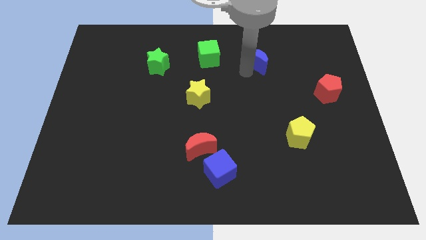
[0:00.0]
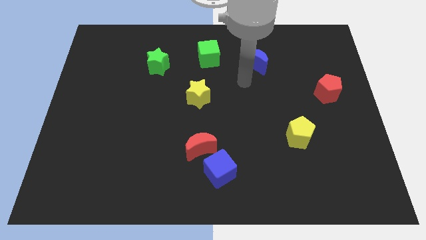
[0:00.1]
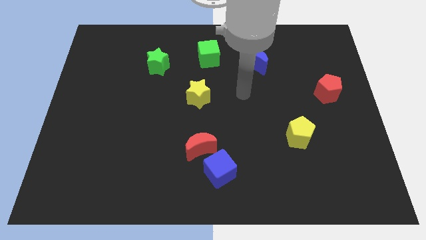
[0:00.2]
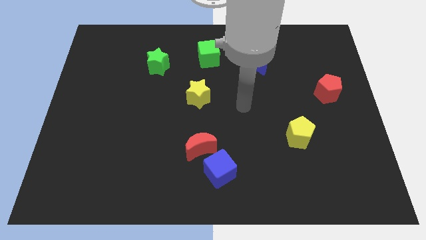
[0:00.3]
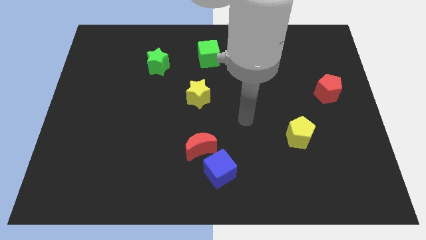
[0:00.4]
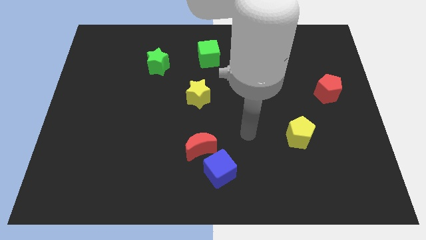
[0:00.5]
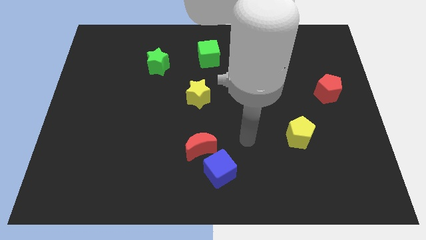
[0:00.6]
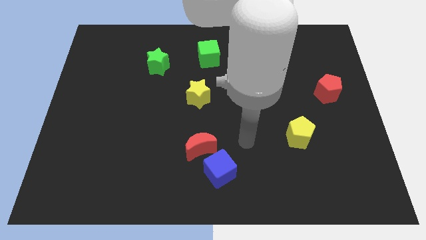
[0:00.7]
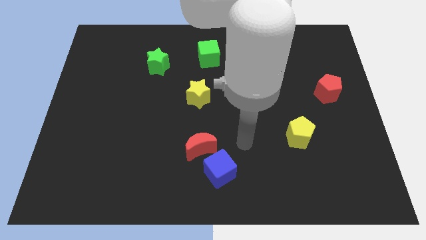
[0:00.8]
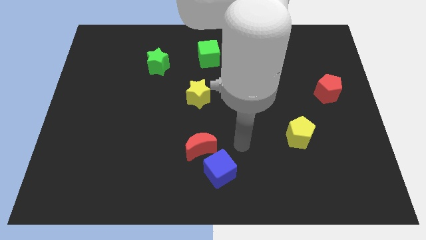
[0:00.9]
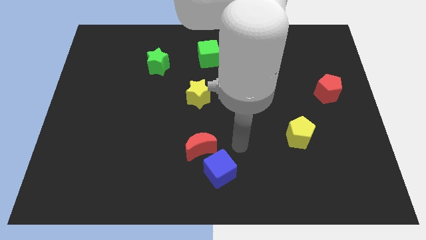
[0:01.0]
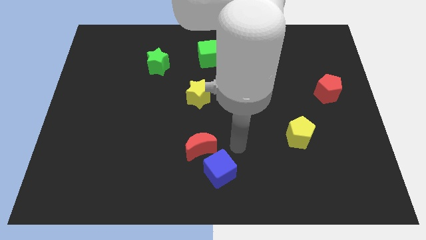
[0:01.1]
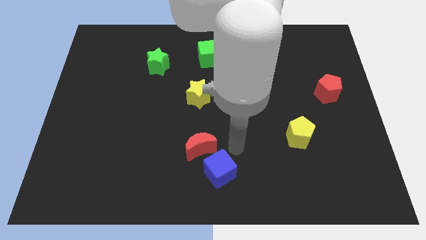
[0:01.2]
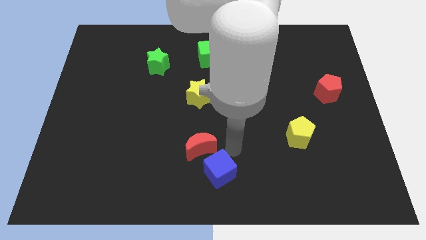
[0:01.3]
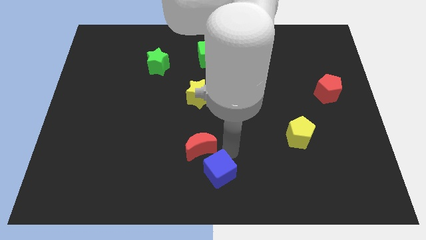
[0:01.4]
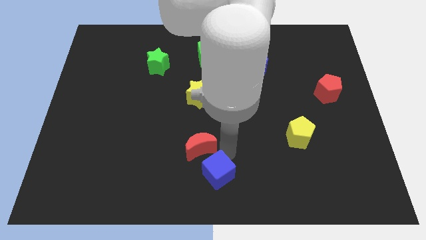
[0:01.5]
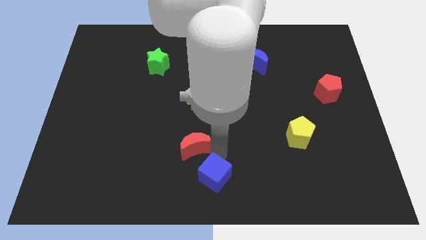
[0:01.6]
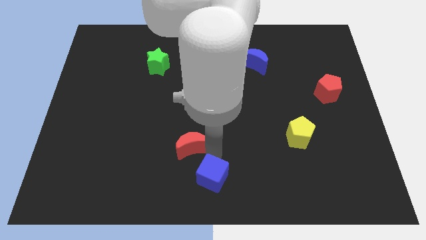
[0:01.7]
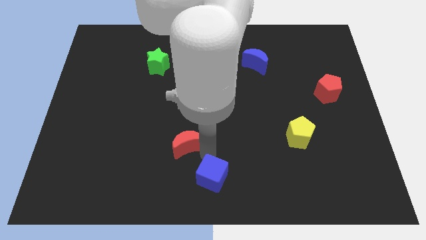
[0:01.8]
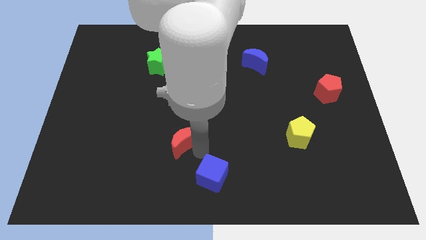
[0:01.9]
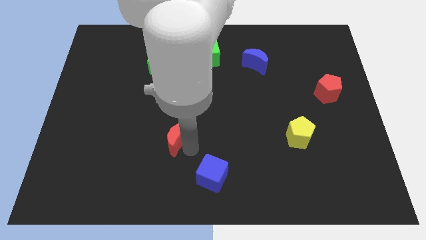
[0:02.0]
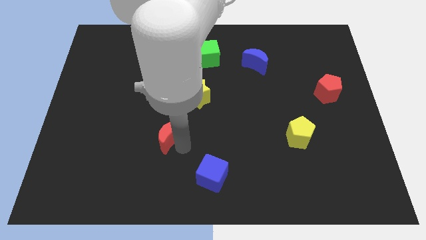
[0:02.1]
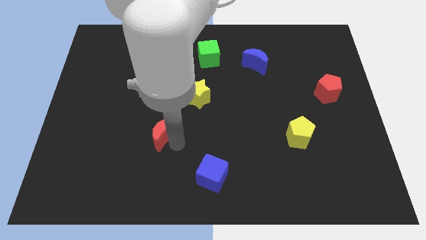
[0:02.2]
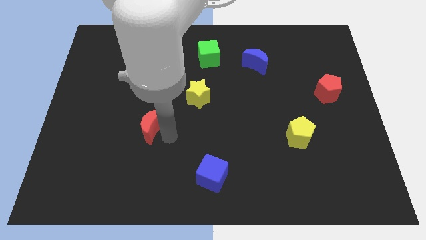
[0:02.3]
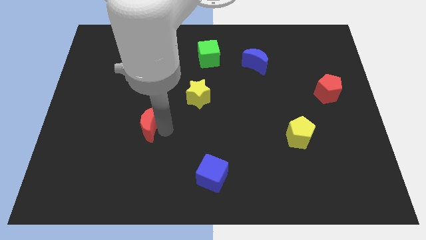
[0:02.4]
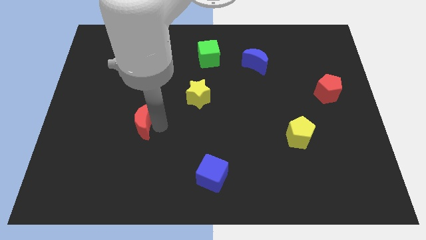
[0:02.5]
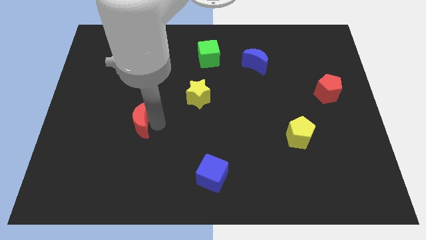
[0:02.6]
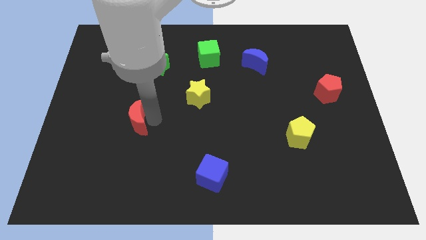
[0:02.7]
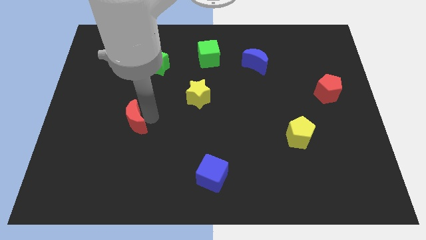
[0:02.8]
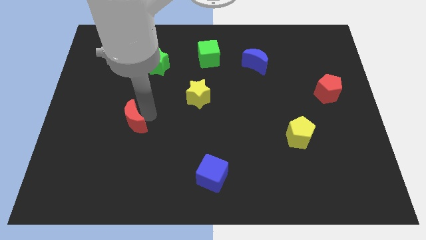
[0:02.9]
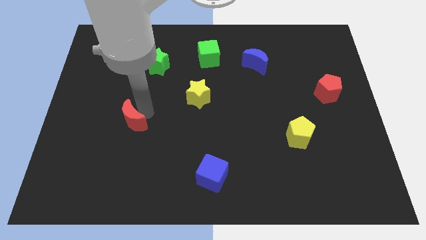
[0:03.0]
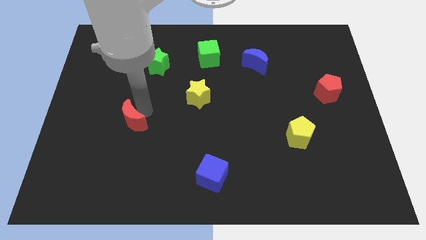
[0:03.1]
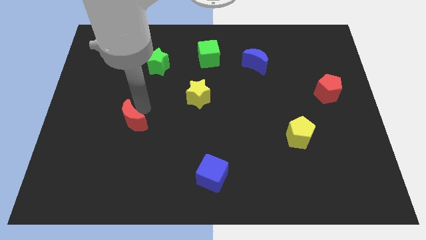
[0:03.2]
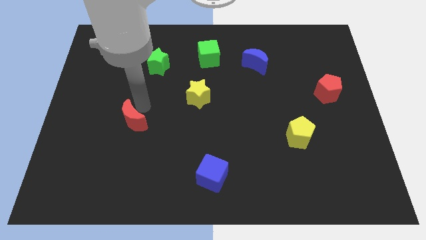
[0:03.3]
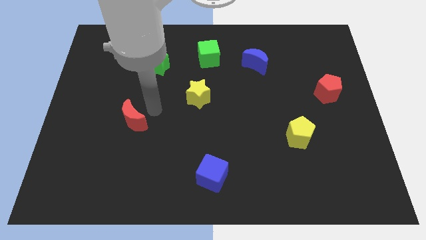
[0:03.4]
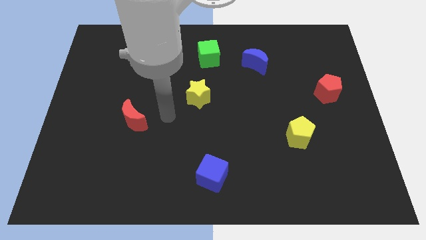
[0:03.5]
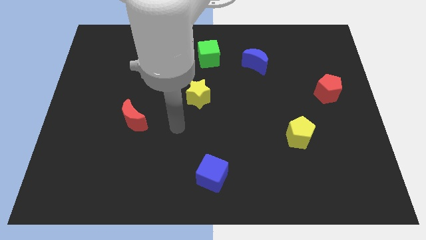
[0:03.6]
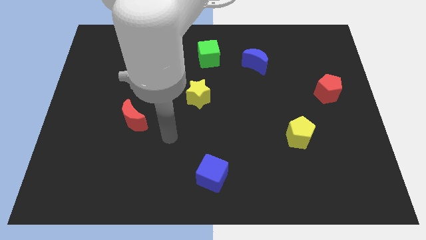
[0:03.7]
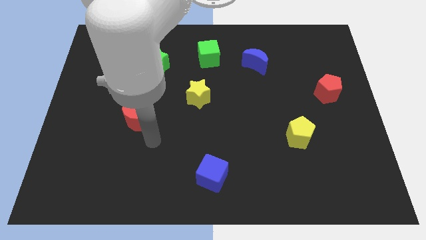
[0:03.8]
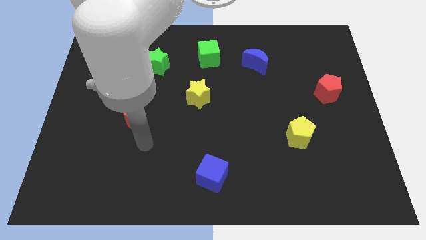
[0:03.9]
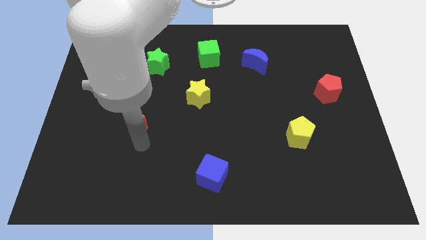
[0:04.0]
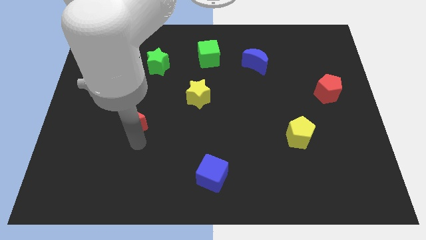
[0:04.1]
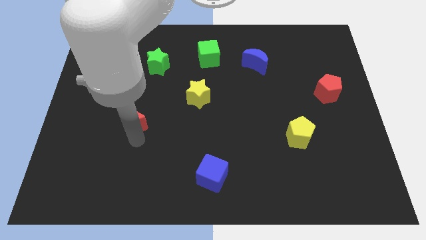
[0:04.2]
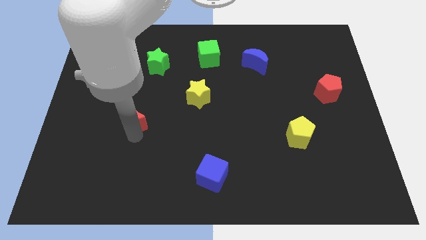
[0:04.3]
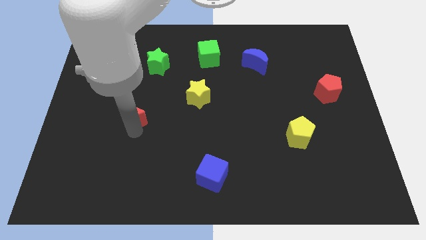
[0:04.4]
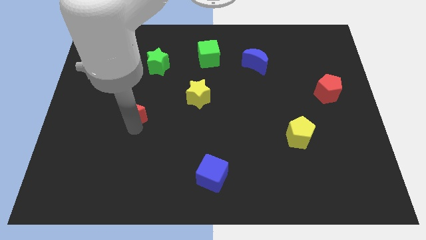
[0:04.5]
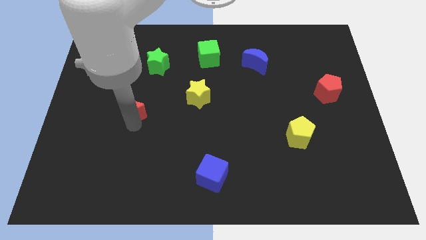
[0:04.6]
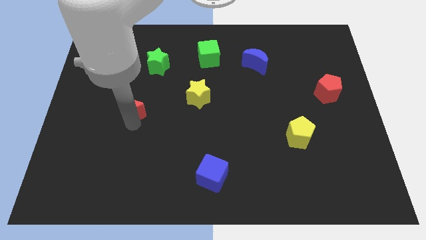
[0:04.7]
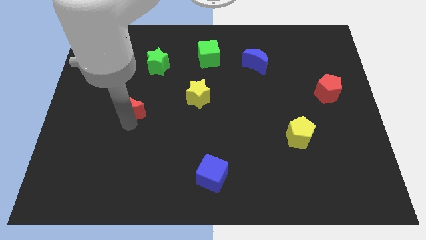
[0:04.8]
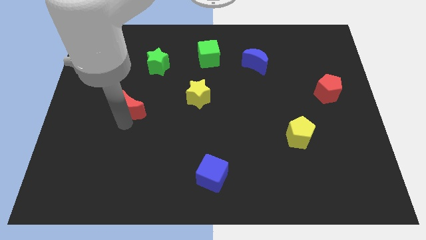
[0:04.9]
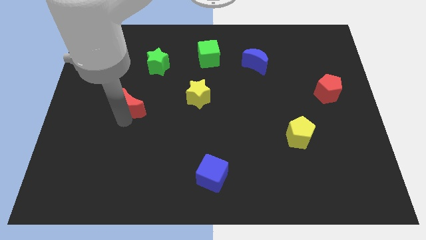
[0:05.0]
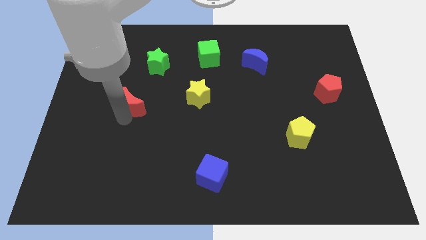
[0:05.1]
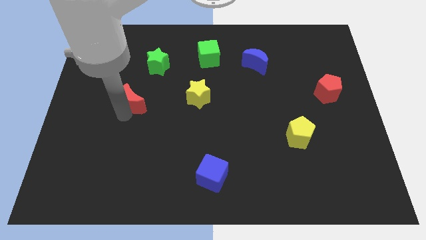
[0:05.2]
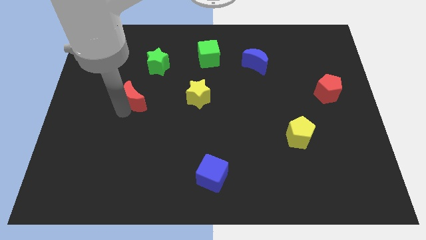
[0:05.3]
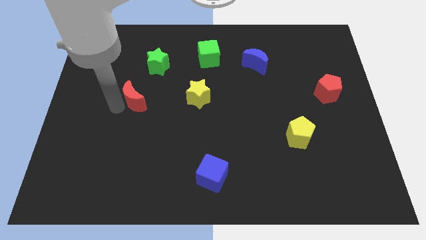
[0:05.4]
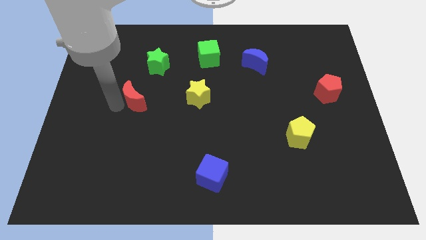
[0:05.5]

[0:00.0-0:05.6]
move the red crescent to the left of the yellow star

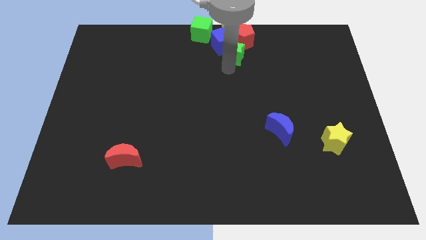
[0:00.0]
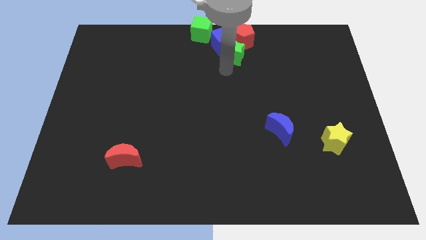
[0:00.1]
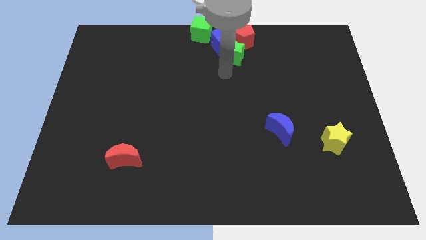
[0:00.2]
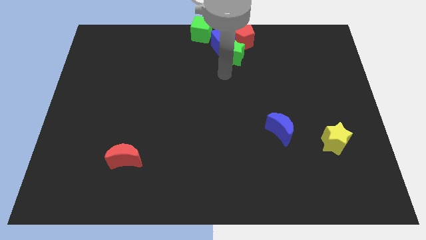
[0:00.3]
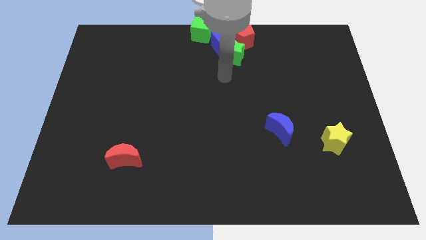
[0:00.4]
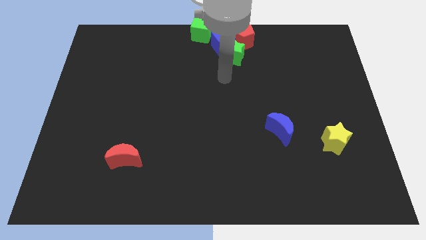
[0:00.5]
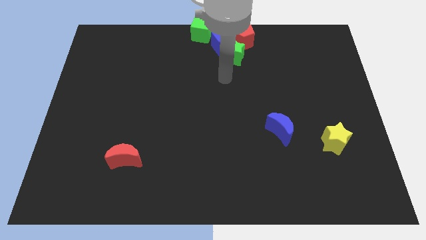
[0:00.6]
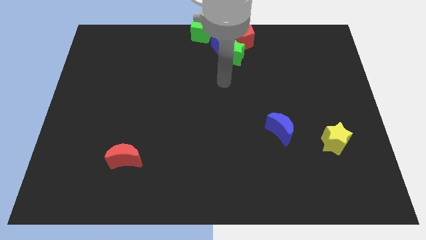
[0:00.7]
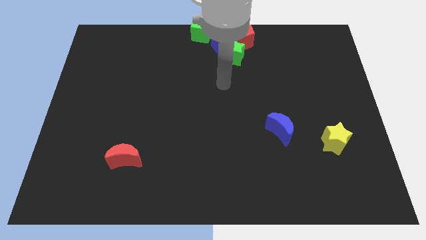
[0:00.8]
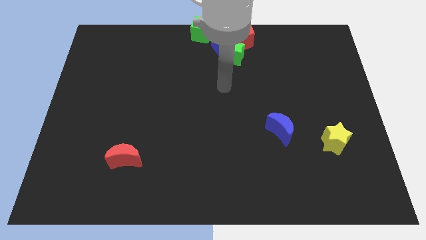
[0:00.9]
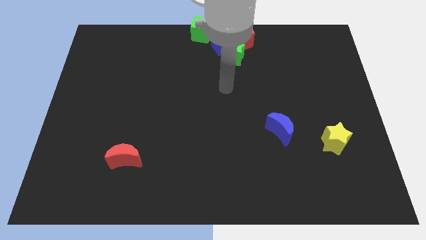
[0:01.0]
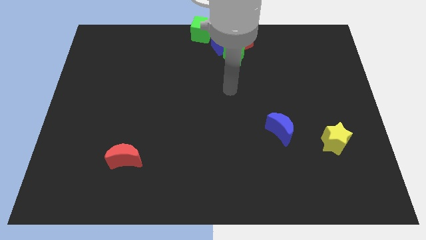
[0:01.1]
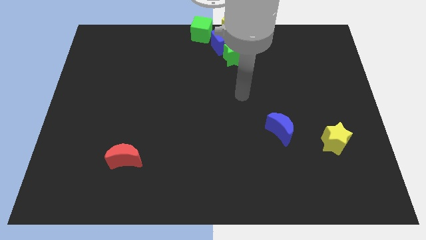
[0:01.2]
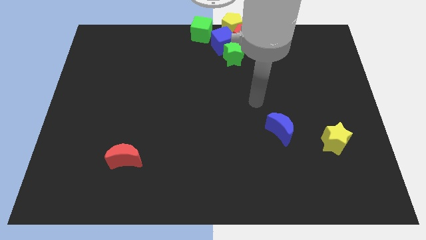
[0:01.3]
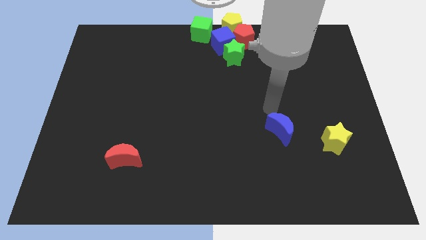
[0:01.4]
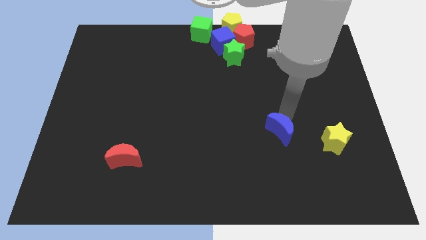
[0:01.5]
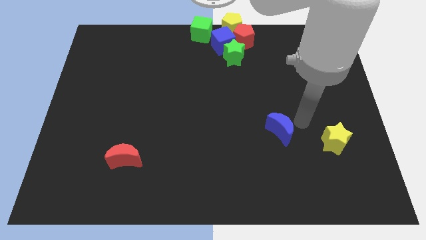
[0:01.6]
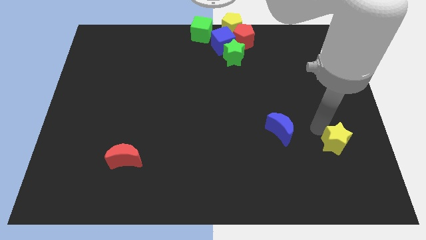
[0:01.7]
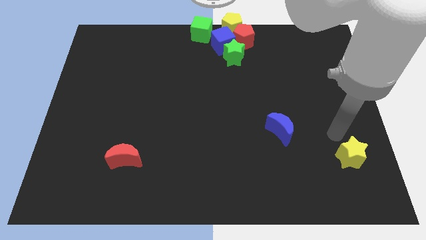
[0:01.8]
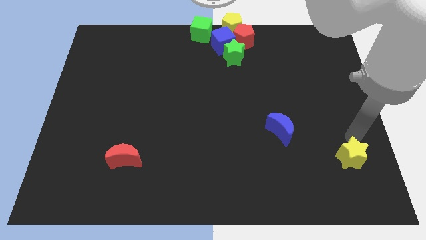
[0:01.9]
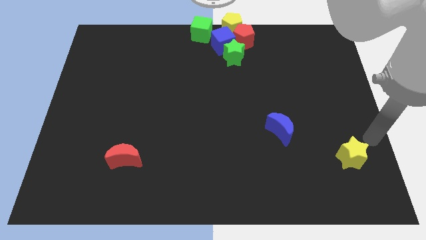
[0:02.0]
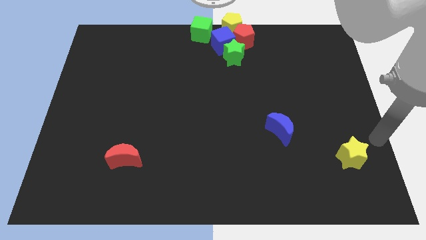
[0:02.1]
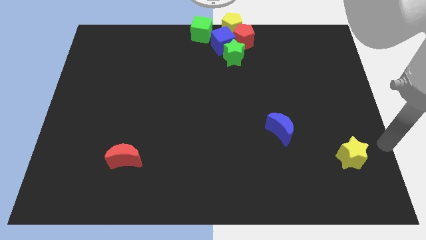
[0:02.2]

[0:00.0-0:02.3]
move your arm to right of the yellow star

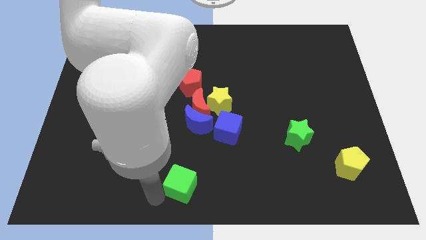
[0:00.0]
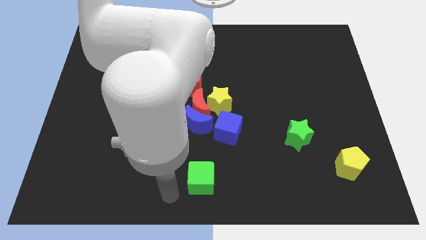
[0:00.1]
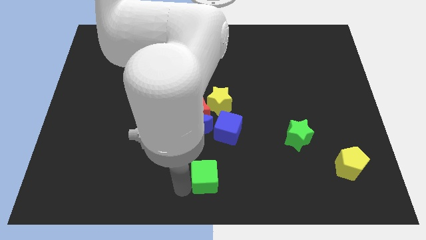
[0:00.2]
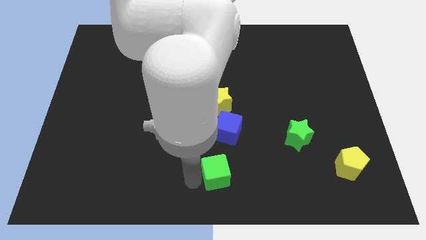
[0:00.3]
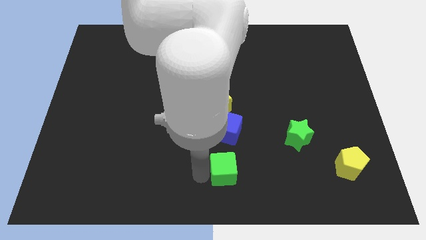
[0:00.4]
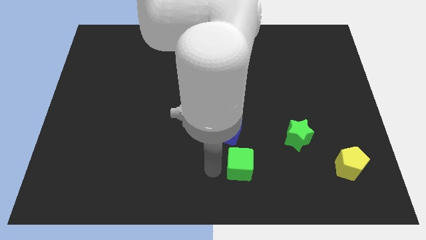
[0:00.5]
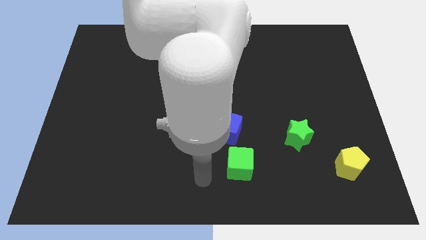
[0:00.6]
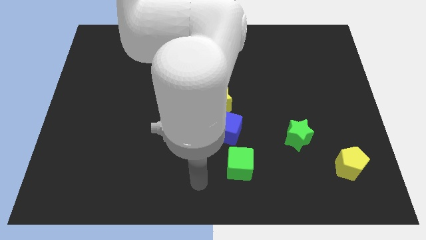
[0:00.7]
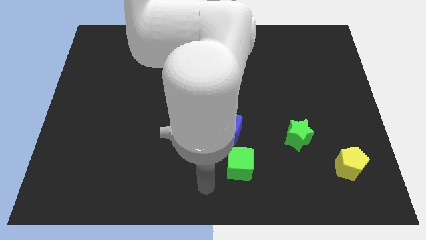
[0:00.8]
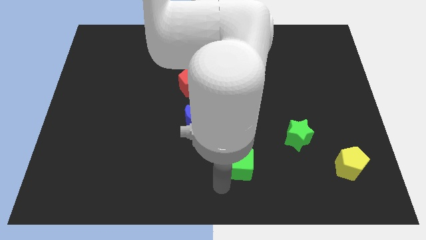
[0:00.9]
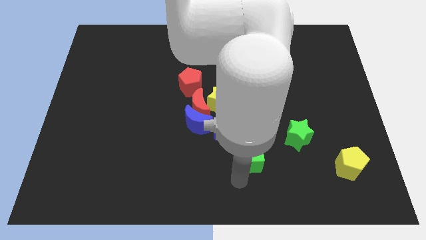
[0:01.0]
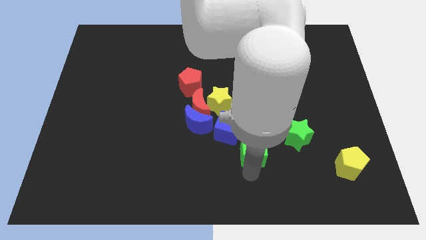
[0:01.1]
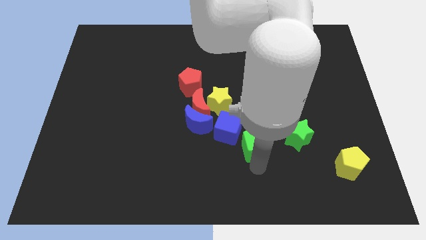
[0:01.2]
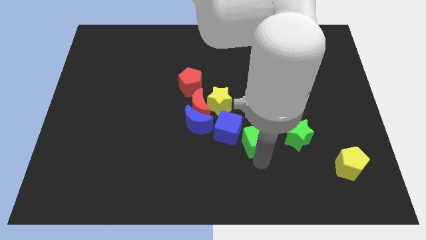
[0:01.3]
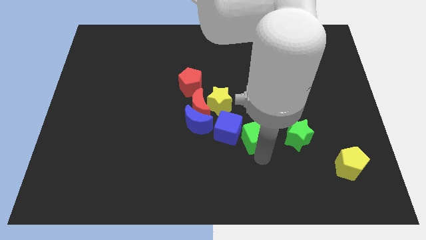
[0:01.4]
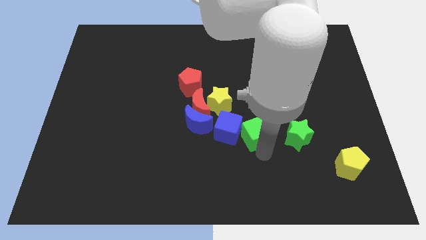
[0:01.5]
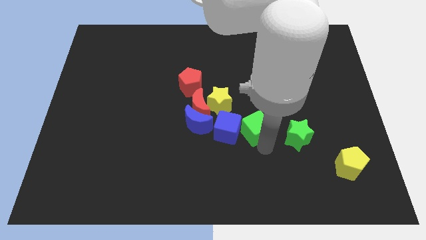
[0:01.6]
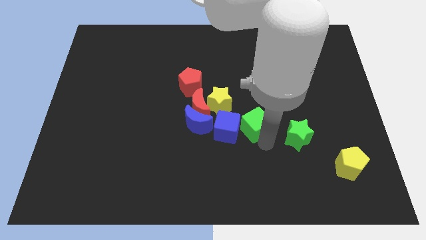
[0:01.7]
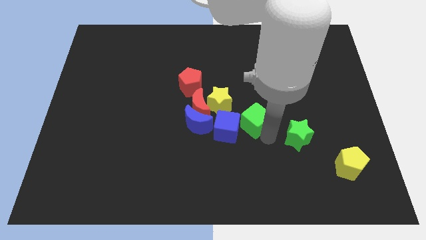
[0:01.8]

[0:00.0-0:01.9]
place the green cube in between blue cube and green star
